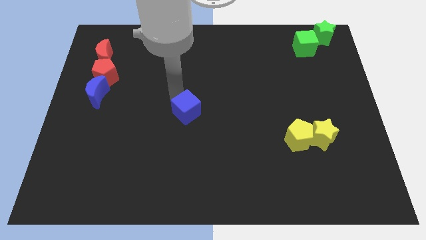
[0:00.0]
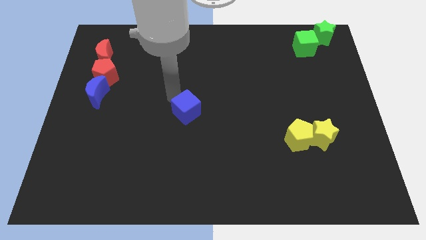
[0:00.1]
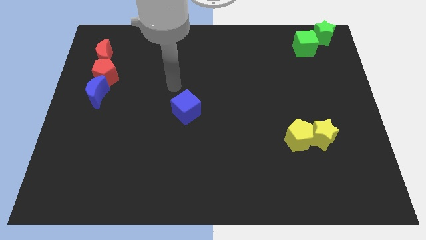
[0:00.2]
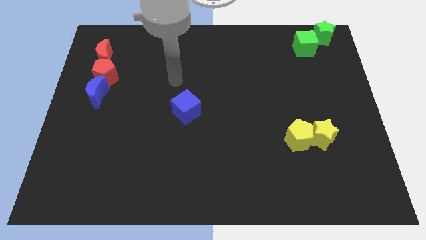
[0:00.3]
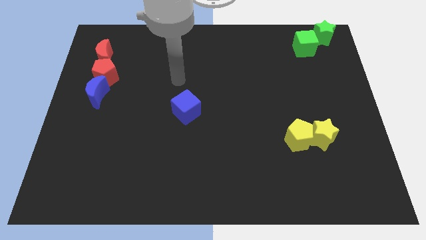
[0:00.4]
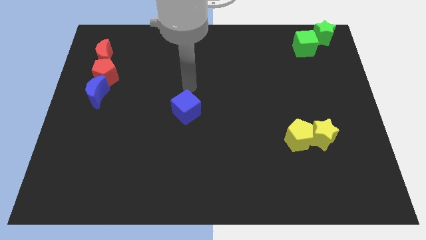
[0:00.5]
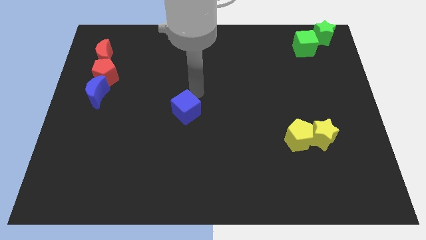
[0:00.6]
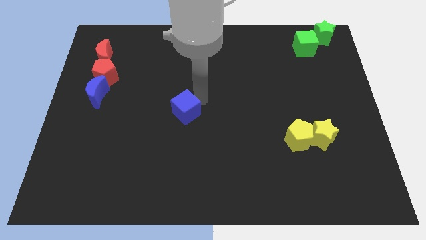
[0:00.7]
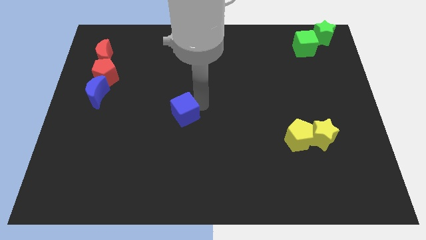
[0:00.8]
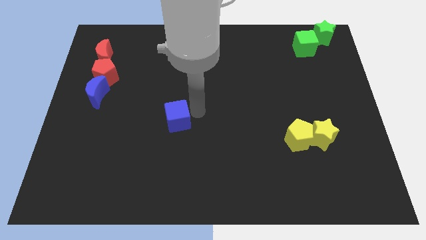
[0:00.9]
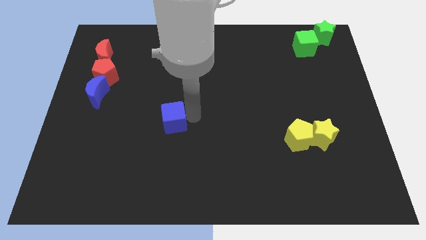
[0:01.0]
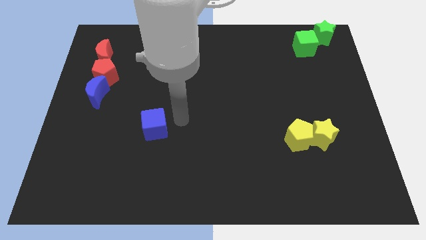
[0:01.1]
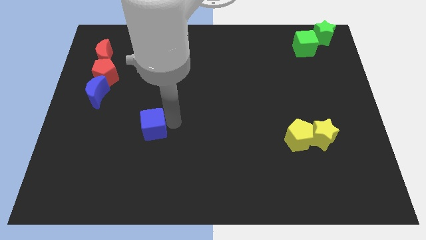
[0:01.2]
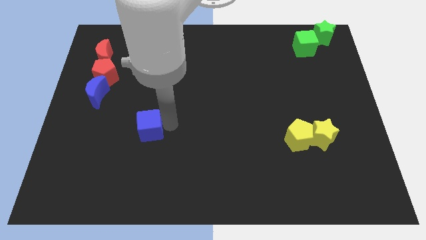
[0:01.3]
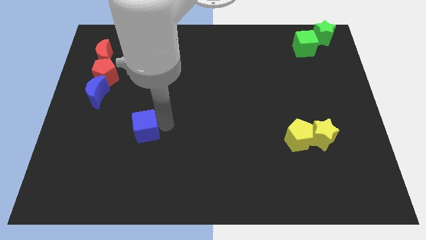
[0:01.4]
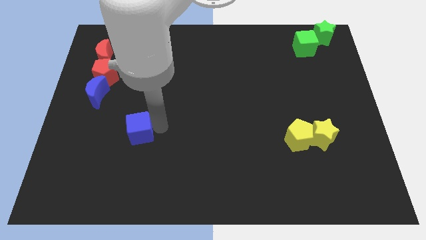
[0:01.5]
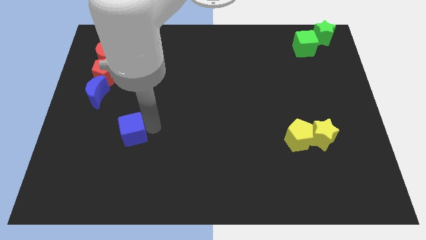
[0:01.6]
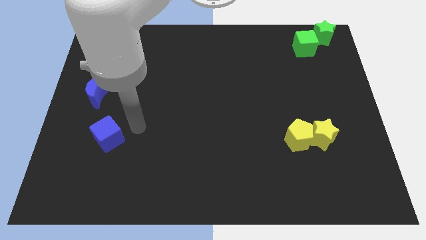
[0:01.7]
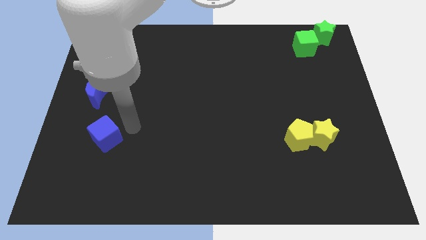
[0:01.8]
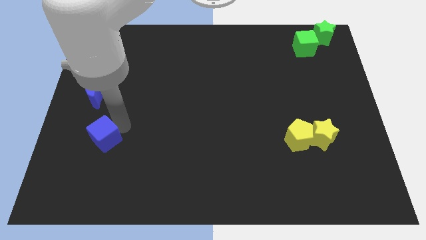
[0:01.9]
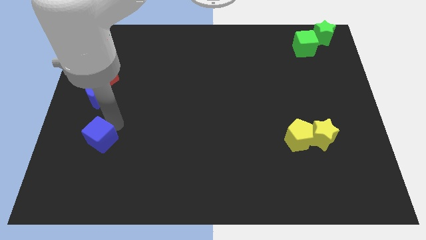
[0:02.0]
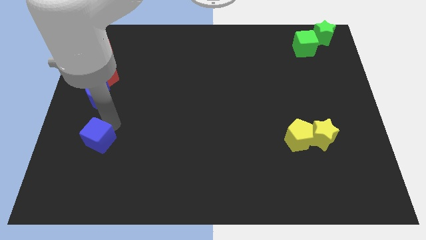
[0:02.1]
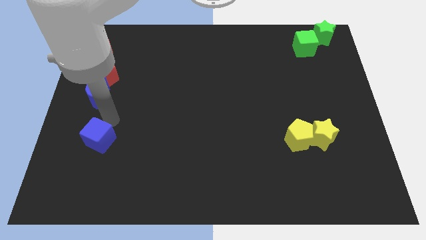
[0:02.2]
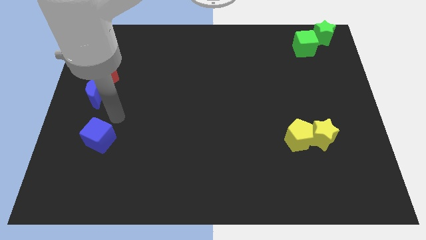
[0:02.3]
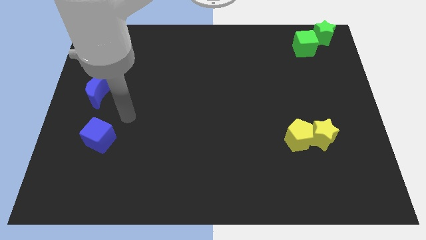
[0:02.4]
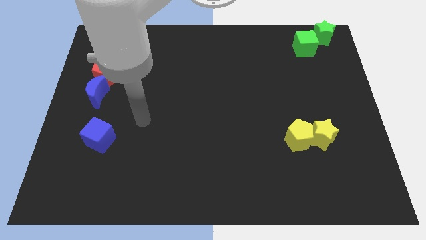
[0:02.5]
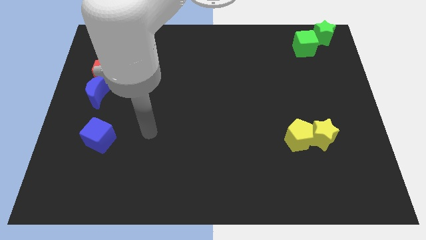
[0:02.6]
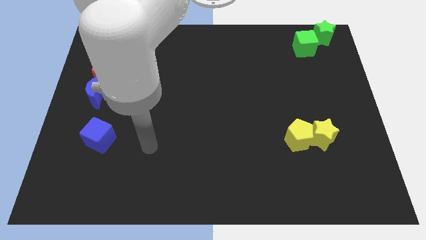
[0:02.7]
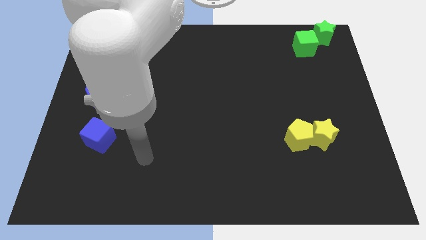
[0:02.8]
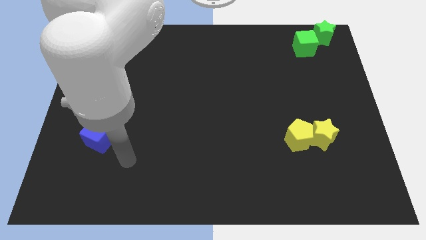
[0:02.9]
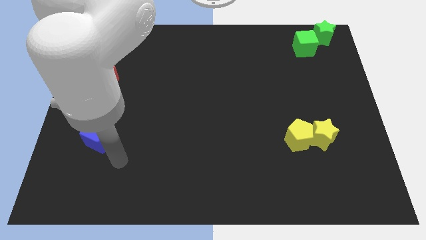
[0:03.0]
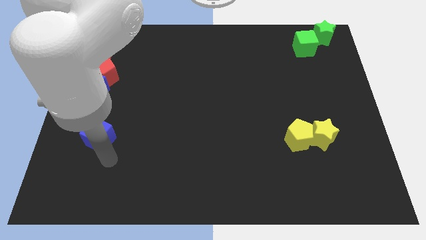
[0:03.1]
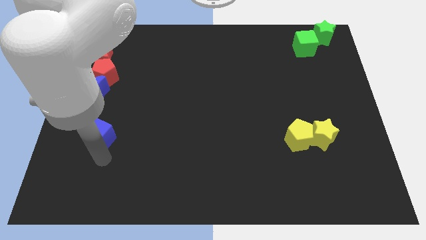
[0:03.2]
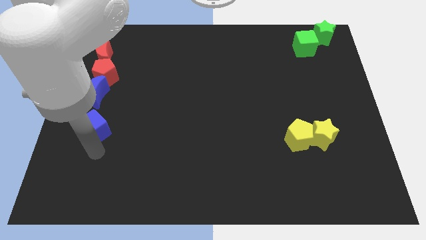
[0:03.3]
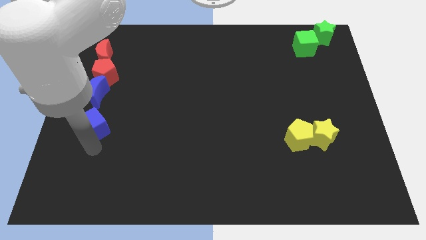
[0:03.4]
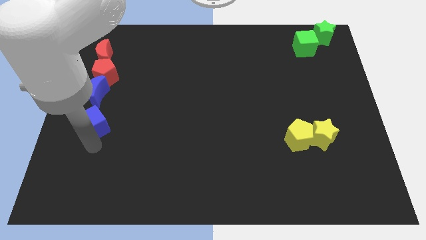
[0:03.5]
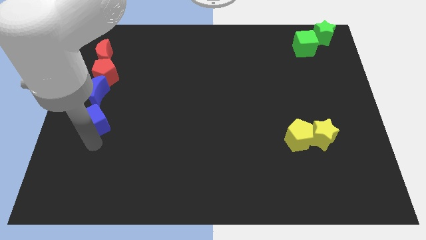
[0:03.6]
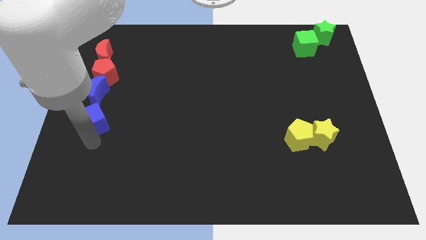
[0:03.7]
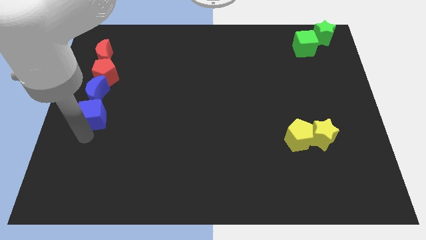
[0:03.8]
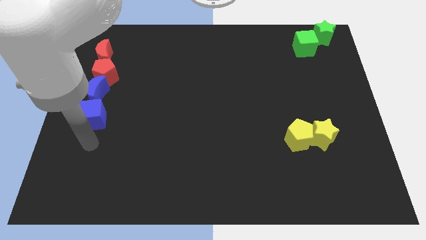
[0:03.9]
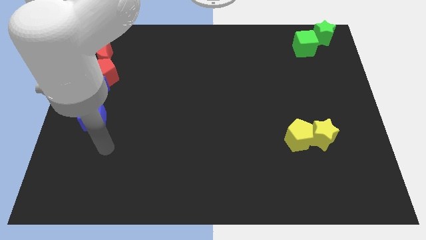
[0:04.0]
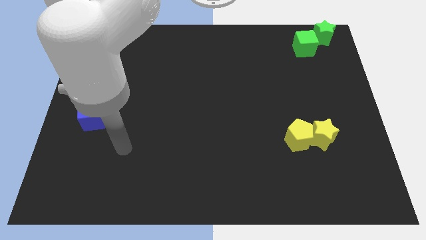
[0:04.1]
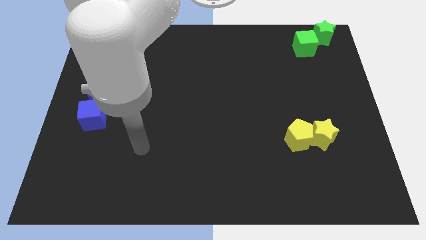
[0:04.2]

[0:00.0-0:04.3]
place the blue cube underneath the blue moon

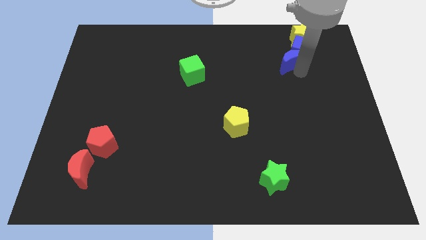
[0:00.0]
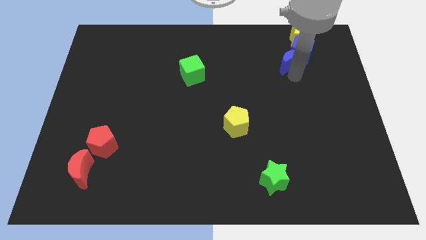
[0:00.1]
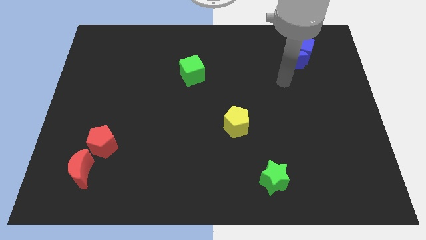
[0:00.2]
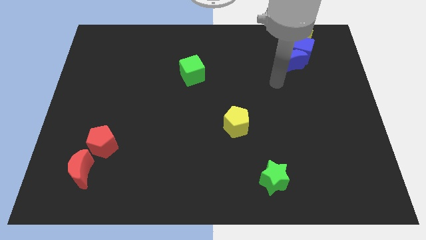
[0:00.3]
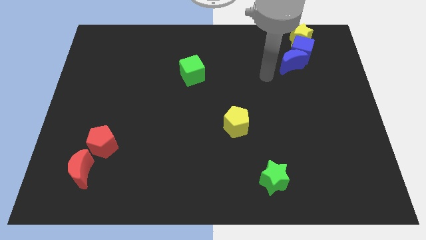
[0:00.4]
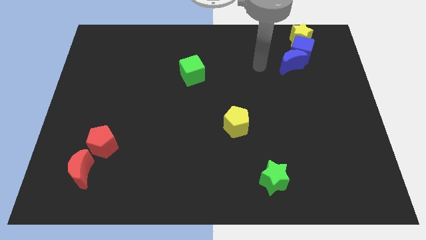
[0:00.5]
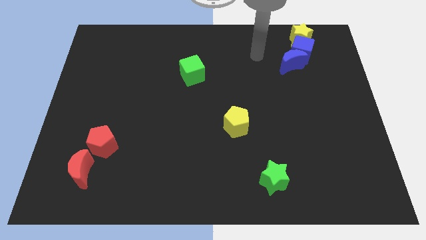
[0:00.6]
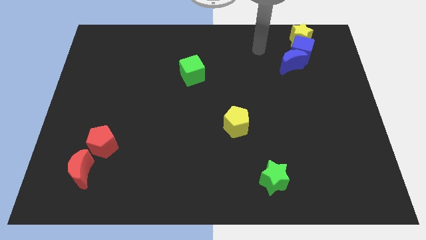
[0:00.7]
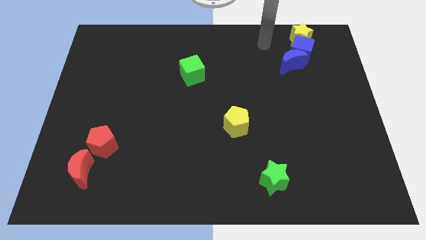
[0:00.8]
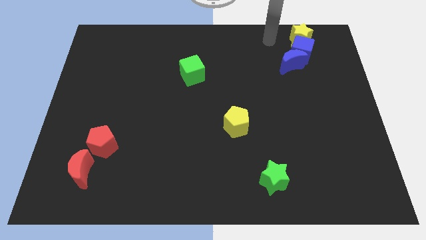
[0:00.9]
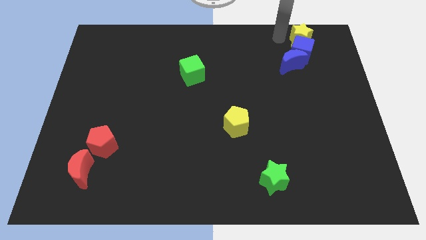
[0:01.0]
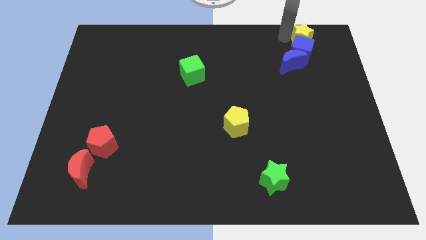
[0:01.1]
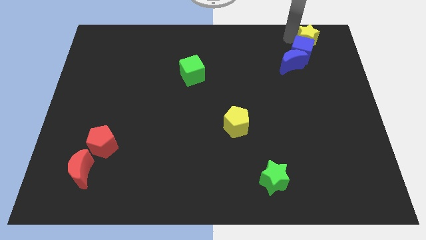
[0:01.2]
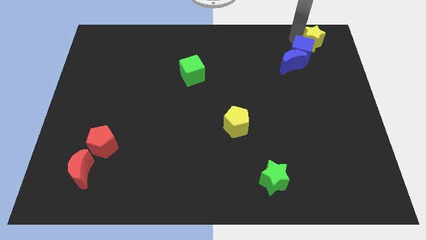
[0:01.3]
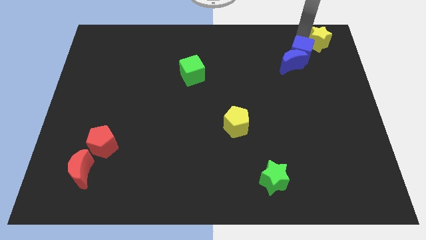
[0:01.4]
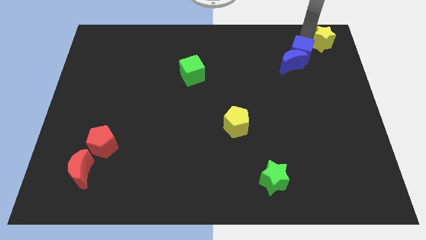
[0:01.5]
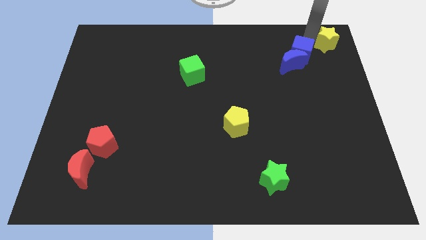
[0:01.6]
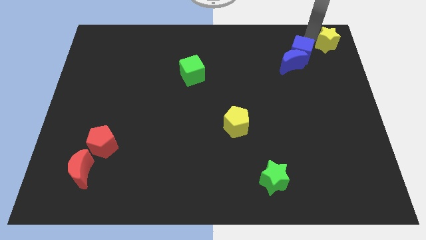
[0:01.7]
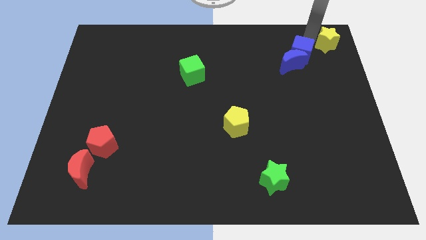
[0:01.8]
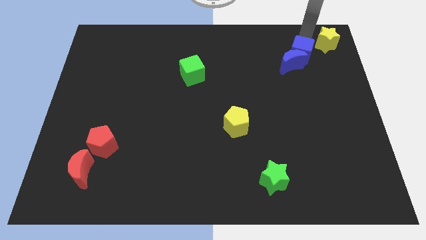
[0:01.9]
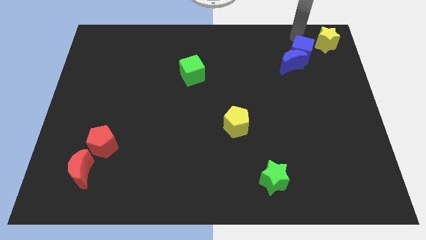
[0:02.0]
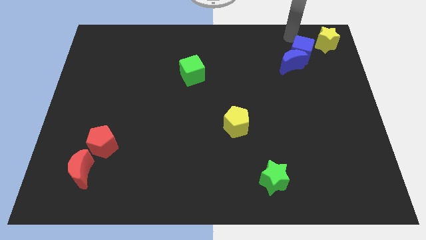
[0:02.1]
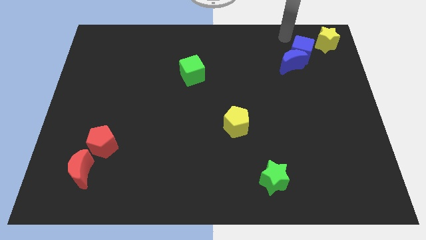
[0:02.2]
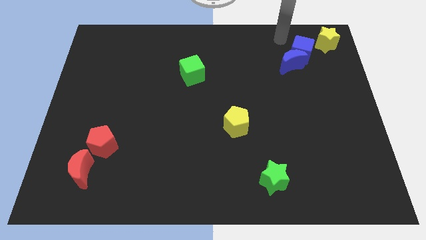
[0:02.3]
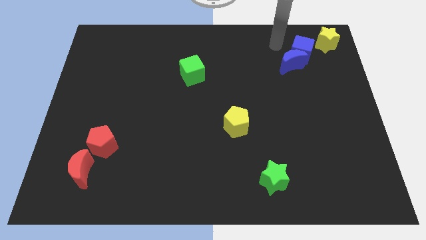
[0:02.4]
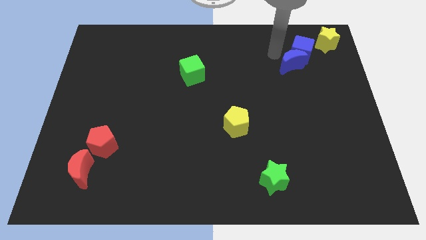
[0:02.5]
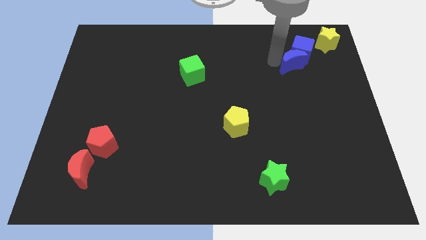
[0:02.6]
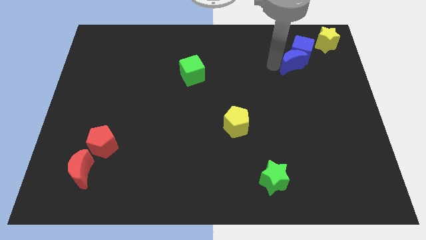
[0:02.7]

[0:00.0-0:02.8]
separate the yellow star from the vertical line of blocks

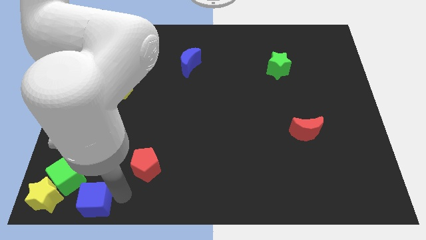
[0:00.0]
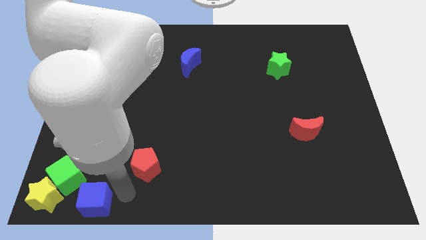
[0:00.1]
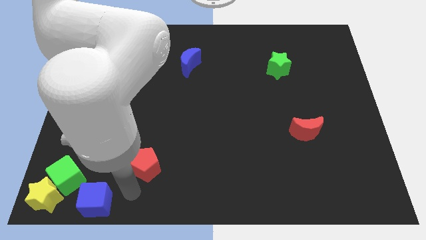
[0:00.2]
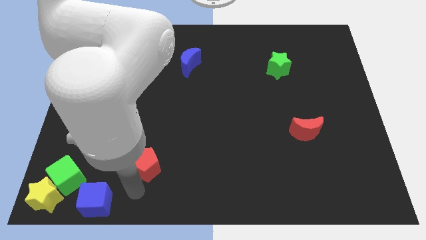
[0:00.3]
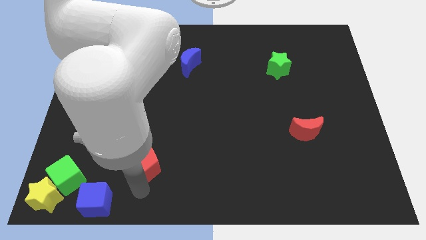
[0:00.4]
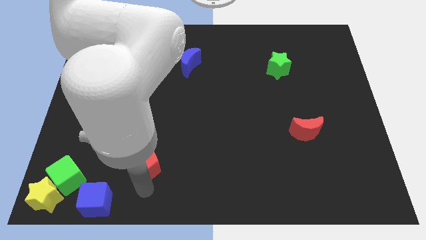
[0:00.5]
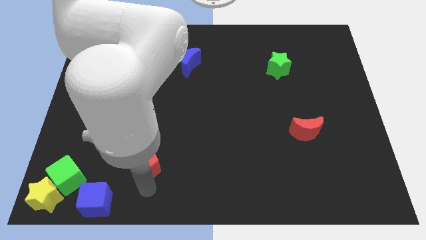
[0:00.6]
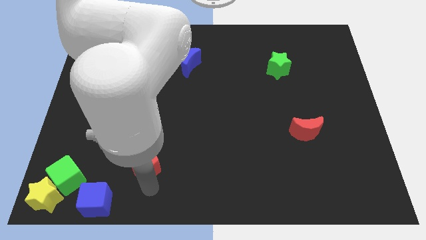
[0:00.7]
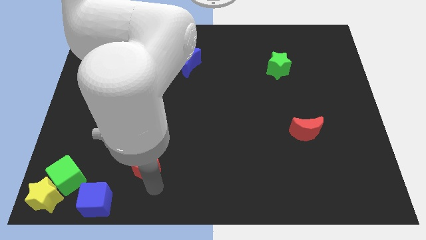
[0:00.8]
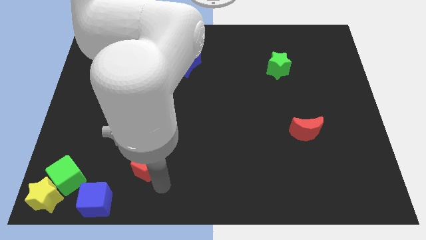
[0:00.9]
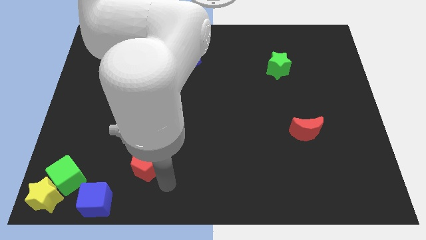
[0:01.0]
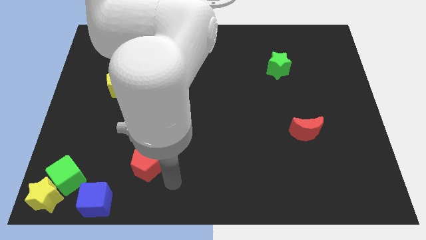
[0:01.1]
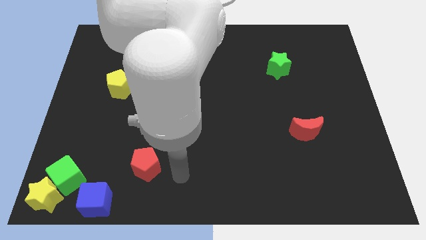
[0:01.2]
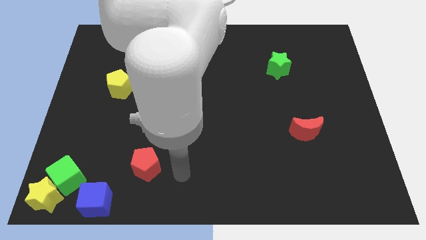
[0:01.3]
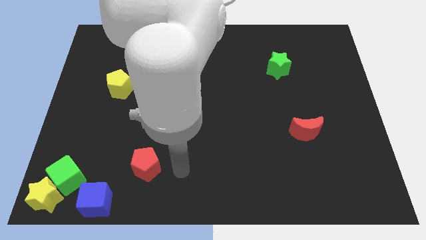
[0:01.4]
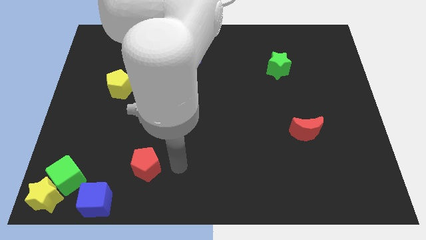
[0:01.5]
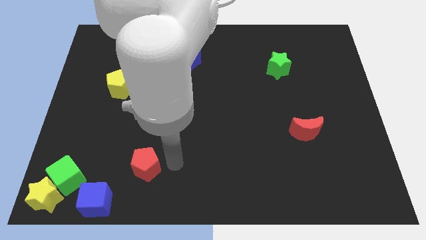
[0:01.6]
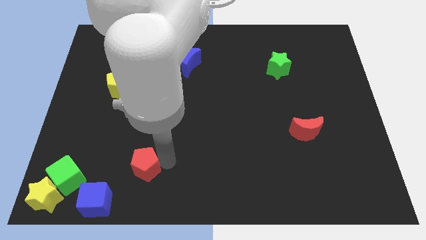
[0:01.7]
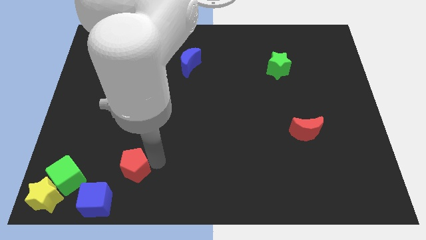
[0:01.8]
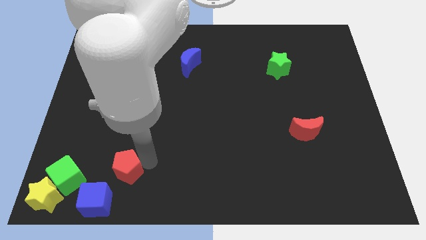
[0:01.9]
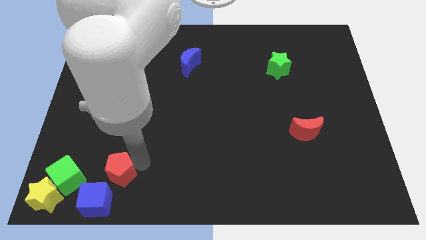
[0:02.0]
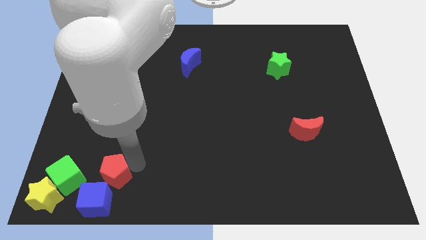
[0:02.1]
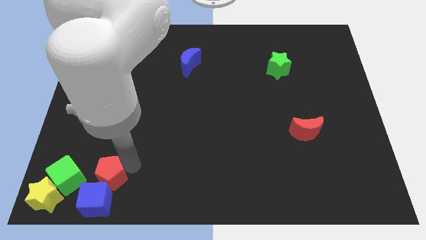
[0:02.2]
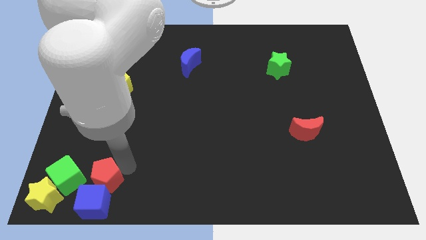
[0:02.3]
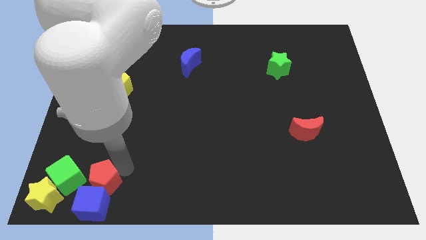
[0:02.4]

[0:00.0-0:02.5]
push the red pentagon into the blue cube
